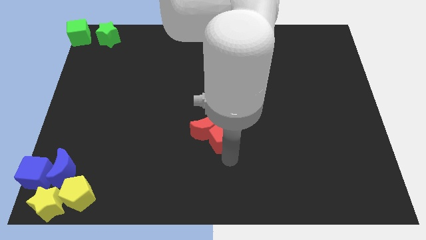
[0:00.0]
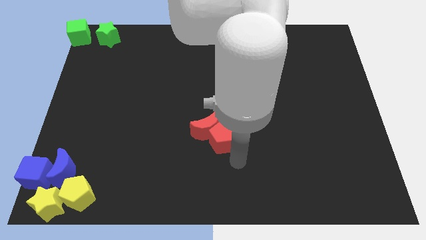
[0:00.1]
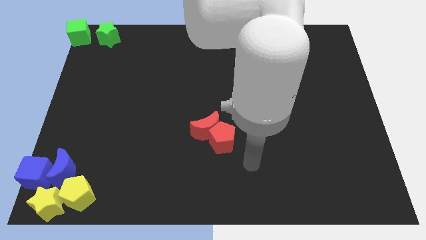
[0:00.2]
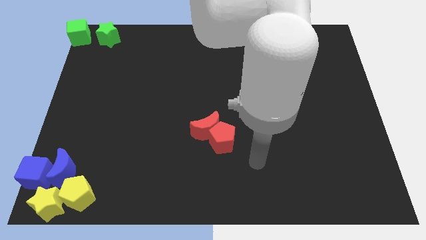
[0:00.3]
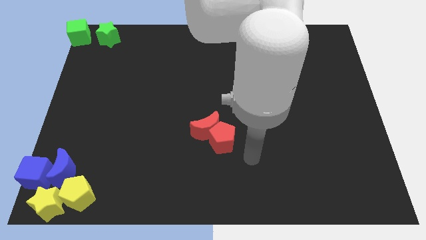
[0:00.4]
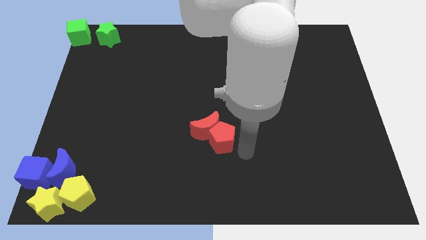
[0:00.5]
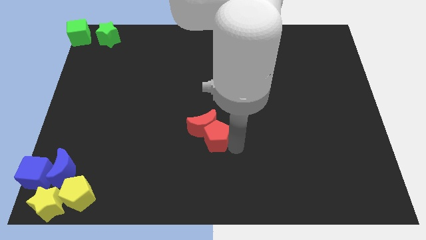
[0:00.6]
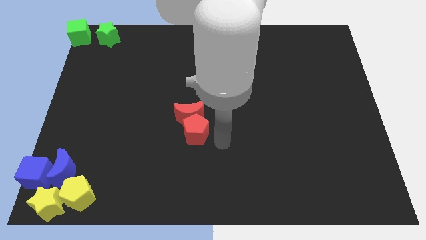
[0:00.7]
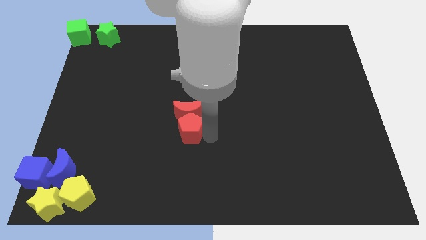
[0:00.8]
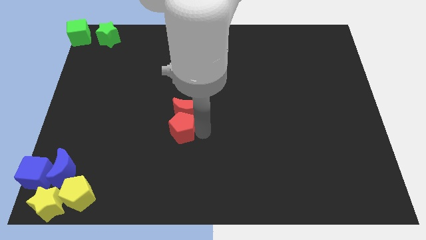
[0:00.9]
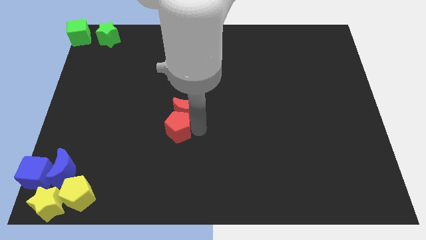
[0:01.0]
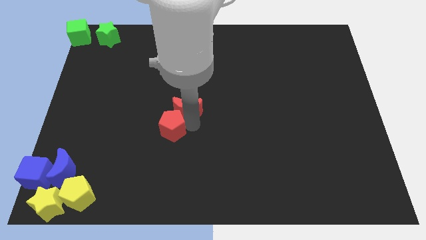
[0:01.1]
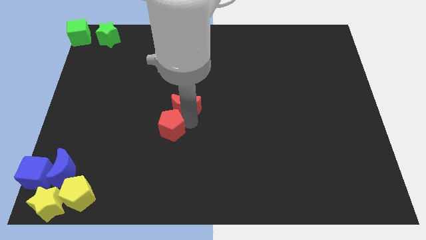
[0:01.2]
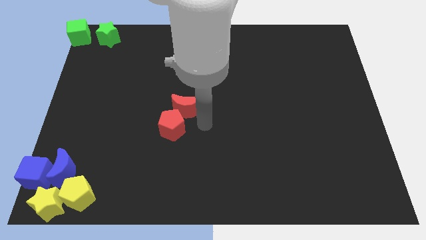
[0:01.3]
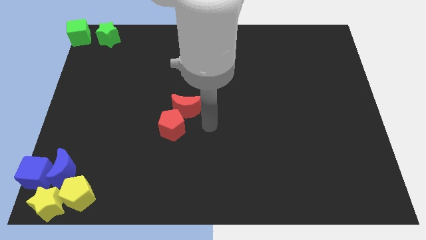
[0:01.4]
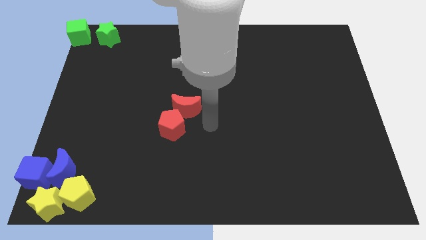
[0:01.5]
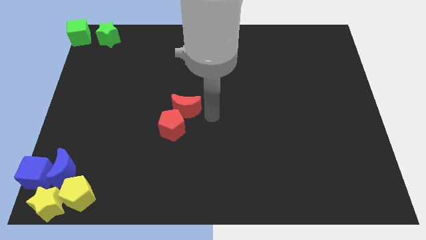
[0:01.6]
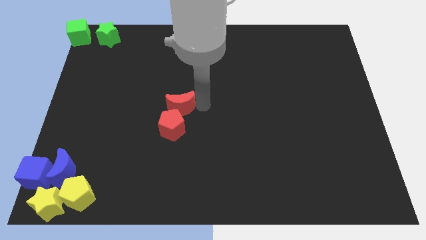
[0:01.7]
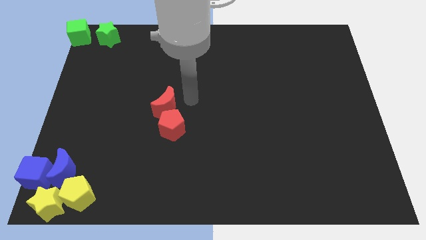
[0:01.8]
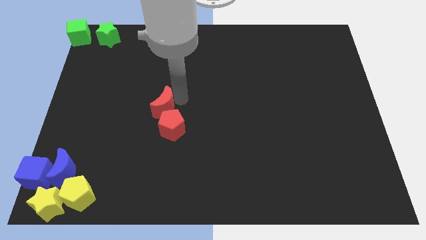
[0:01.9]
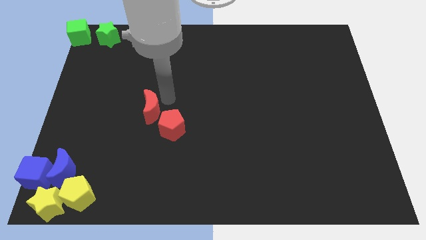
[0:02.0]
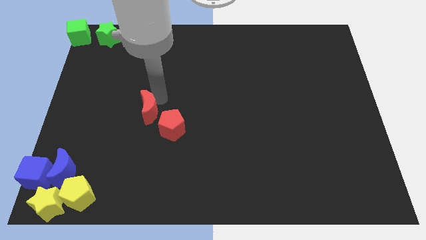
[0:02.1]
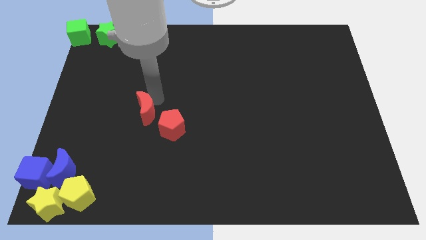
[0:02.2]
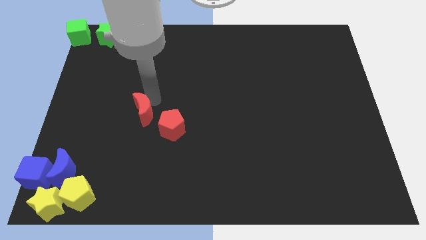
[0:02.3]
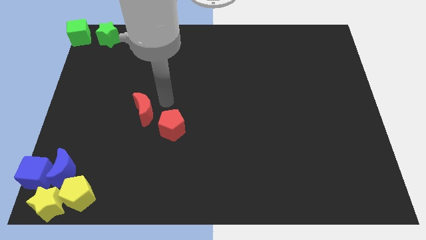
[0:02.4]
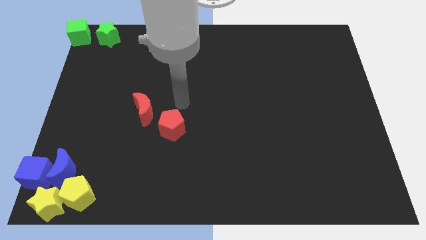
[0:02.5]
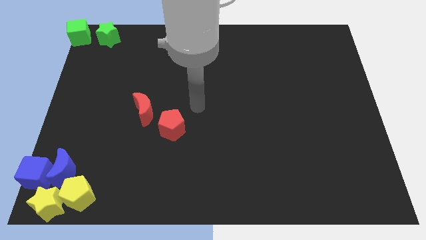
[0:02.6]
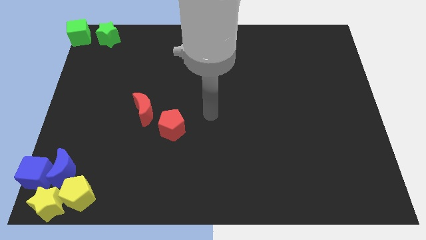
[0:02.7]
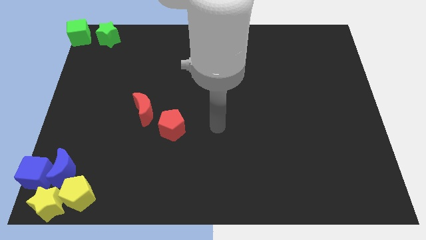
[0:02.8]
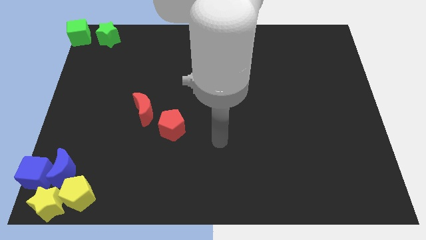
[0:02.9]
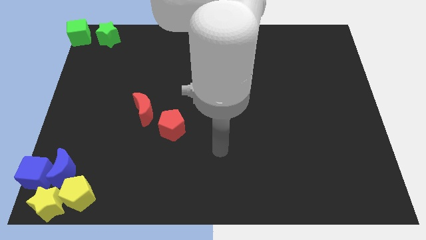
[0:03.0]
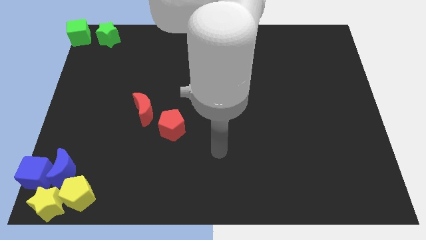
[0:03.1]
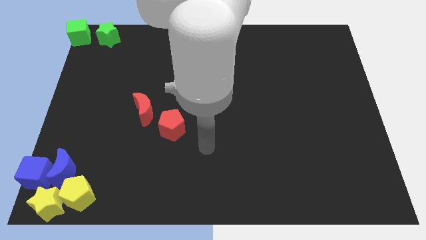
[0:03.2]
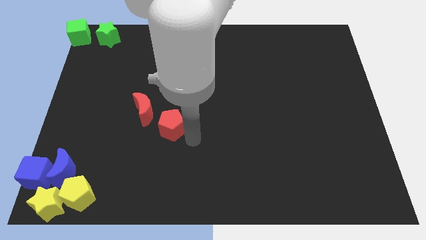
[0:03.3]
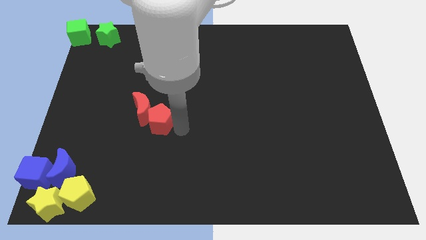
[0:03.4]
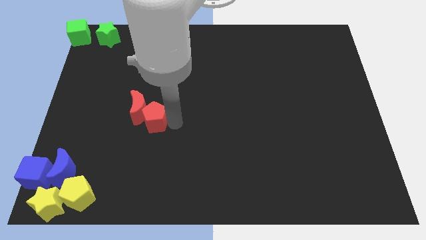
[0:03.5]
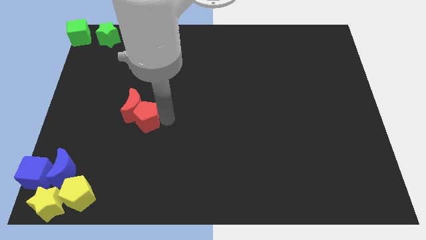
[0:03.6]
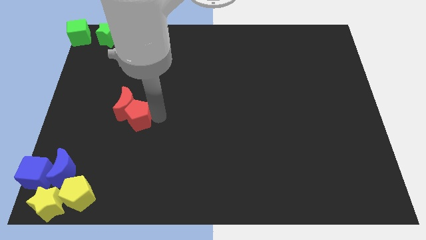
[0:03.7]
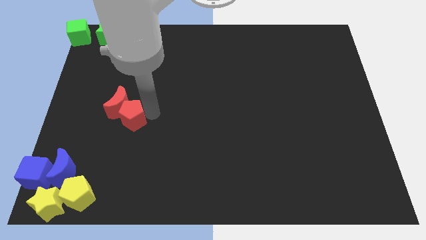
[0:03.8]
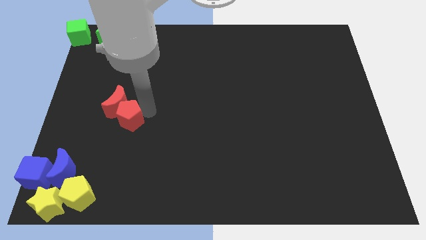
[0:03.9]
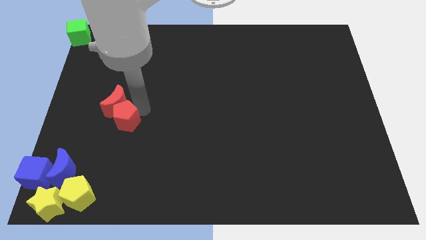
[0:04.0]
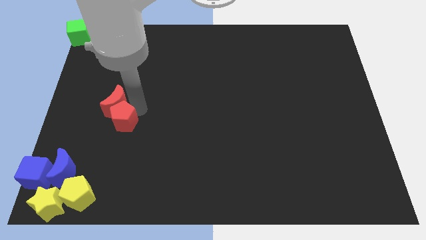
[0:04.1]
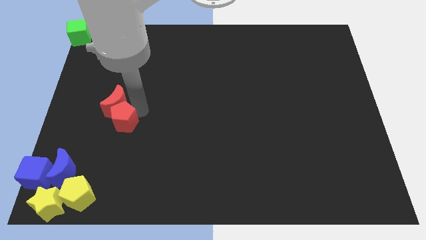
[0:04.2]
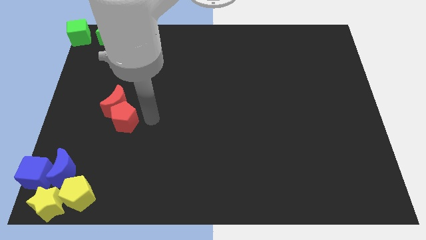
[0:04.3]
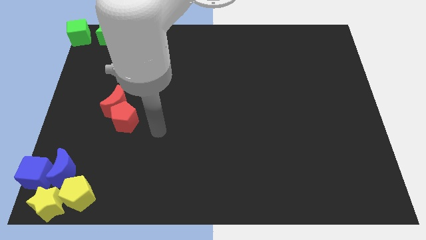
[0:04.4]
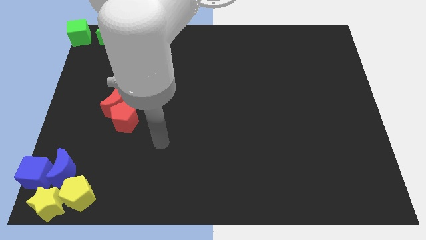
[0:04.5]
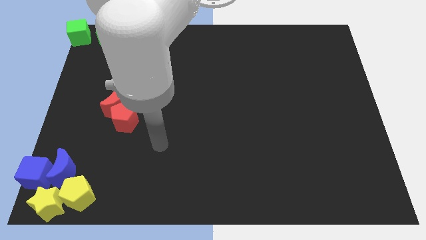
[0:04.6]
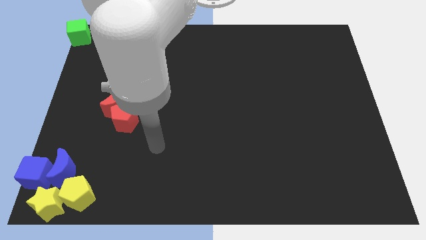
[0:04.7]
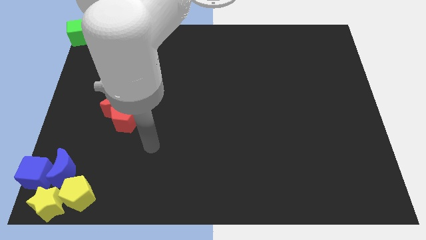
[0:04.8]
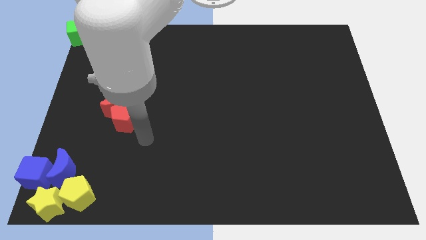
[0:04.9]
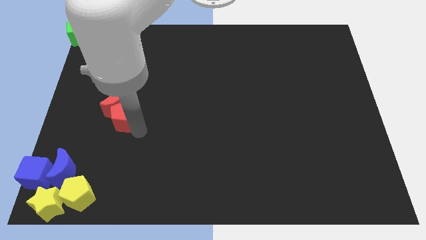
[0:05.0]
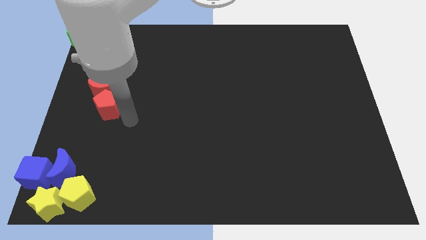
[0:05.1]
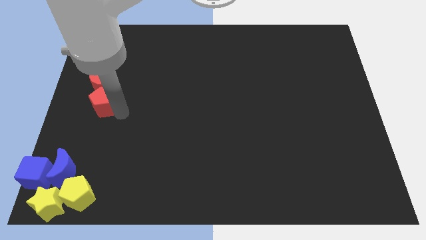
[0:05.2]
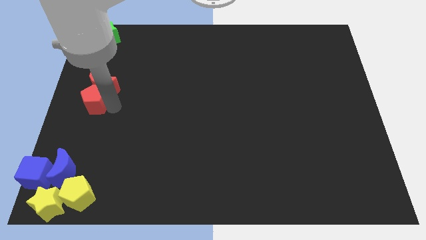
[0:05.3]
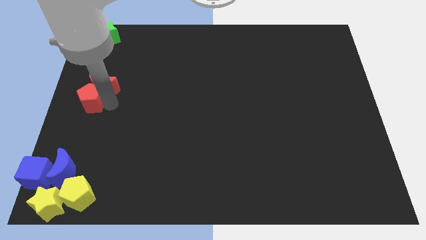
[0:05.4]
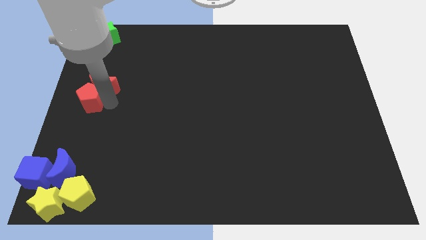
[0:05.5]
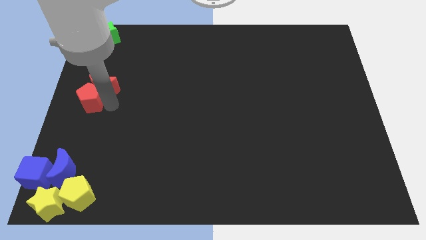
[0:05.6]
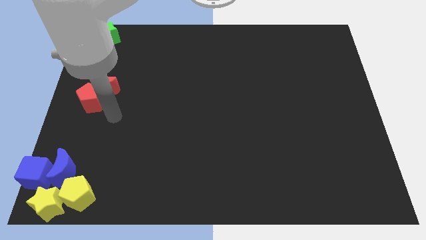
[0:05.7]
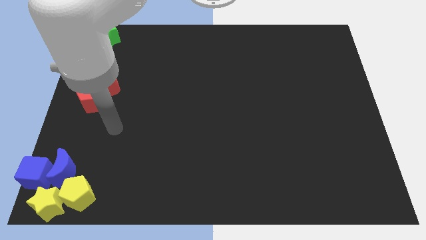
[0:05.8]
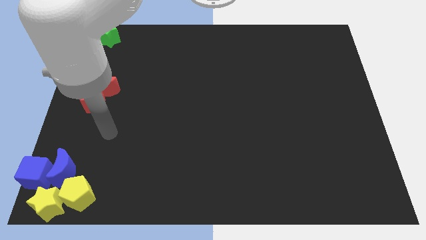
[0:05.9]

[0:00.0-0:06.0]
slide the red things to the left side of the board

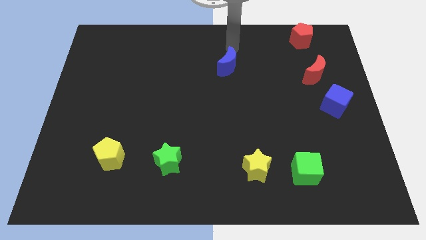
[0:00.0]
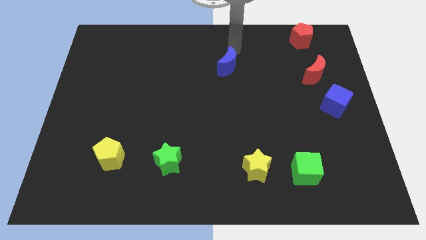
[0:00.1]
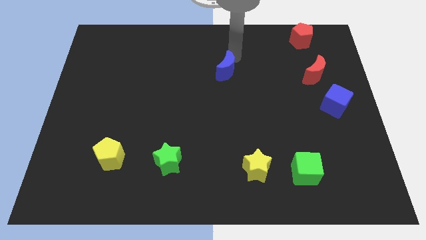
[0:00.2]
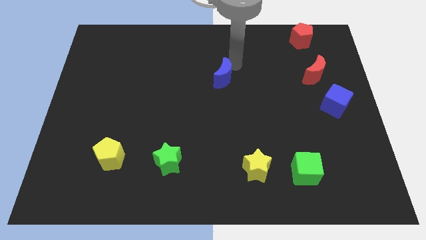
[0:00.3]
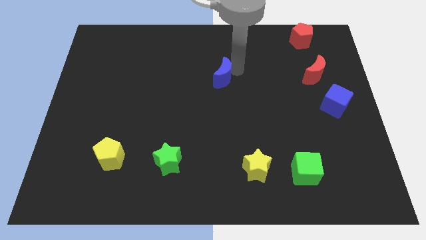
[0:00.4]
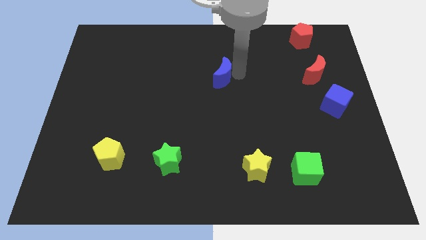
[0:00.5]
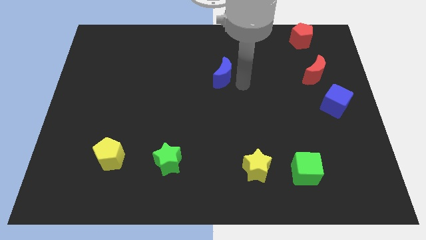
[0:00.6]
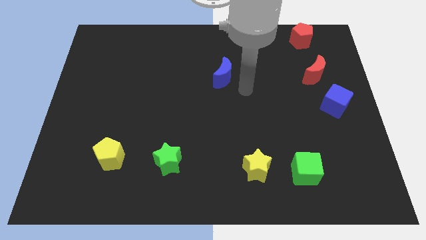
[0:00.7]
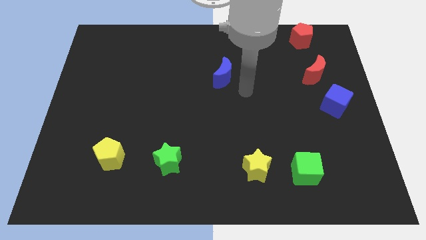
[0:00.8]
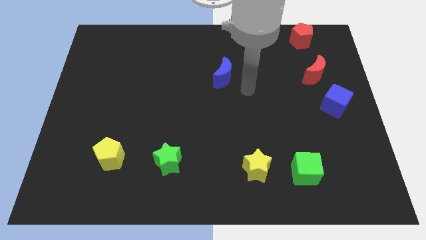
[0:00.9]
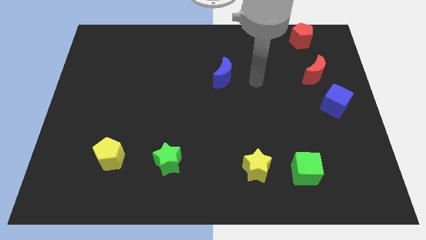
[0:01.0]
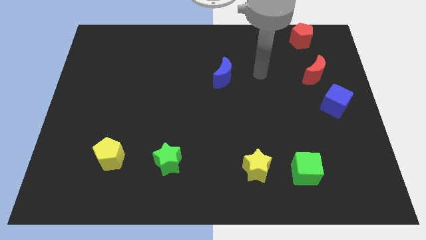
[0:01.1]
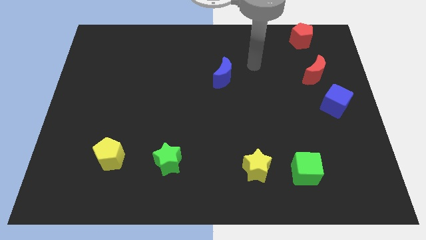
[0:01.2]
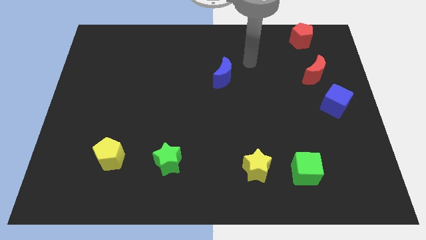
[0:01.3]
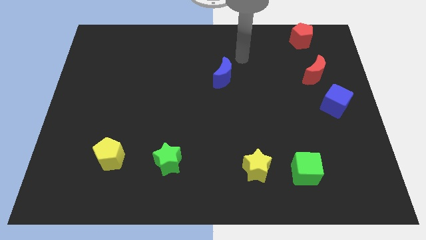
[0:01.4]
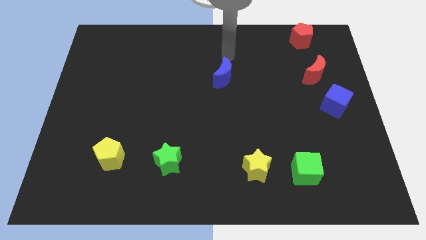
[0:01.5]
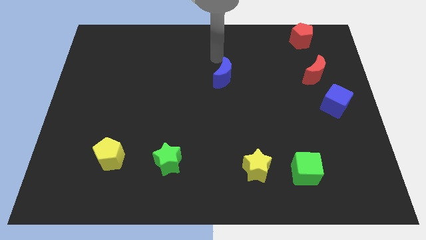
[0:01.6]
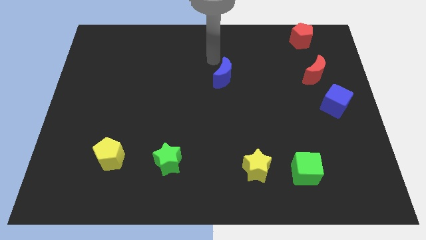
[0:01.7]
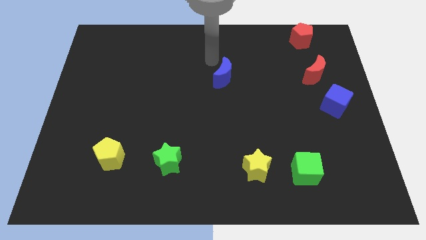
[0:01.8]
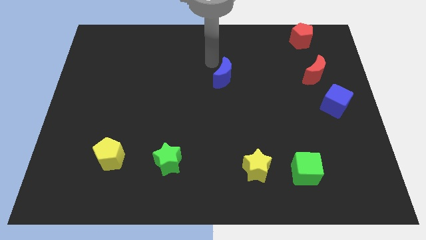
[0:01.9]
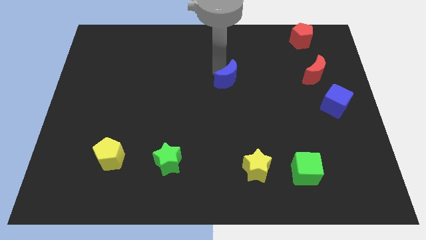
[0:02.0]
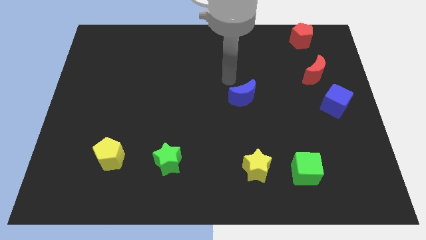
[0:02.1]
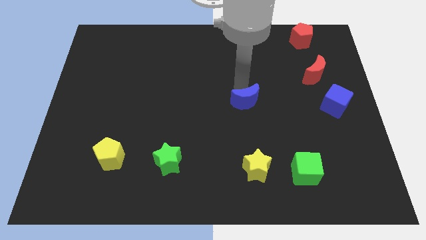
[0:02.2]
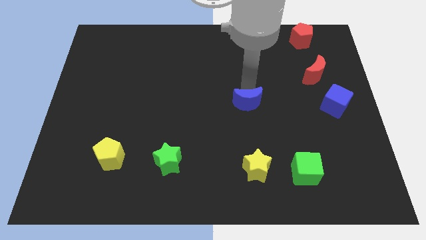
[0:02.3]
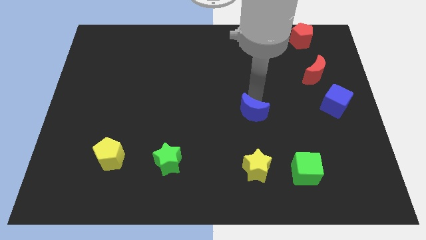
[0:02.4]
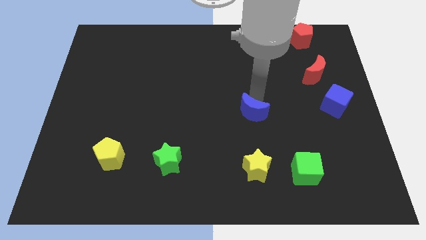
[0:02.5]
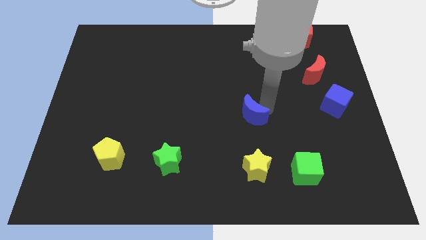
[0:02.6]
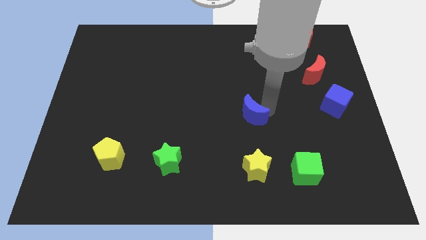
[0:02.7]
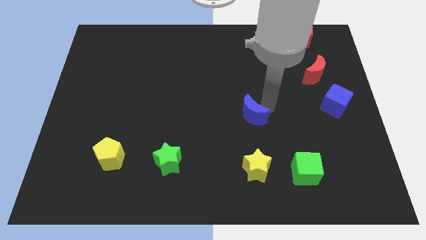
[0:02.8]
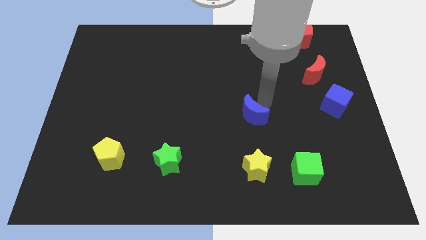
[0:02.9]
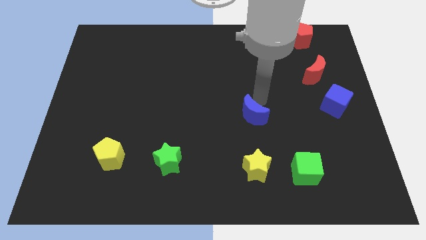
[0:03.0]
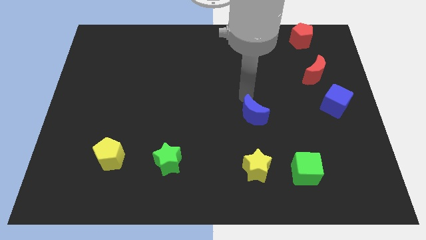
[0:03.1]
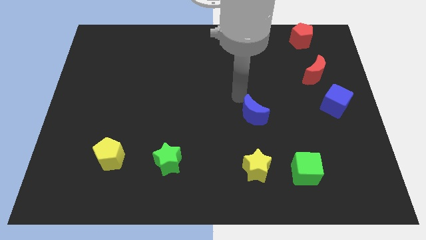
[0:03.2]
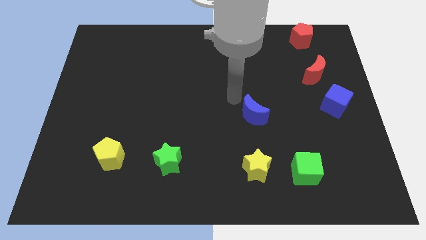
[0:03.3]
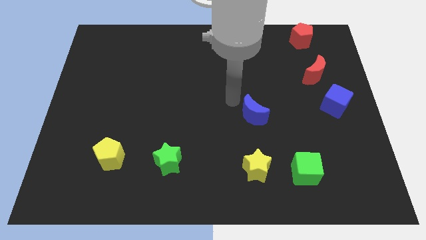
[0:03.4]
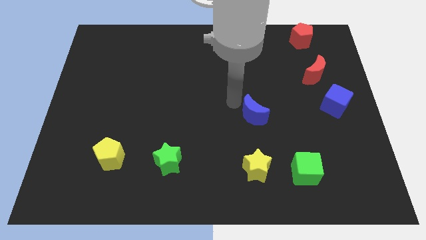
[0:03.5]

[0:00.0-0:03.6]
push the blue crescent vertically above the yellow star
